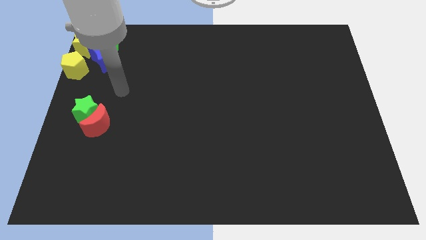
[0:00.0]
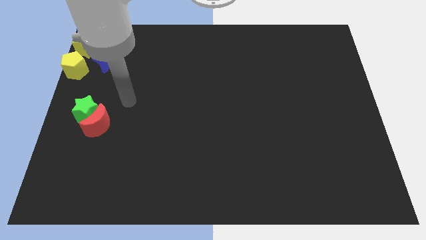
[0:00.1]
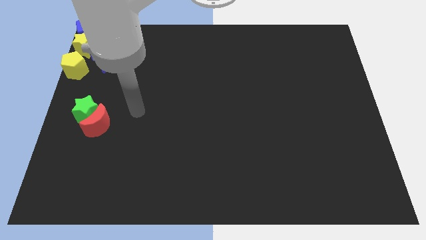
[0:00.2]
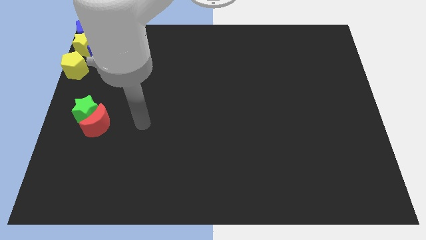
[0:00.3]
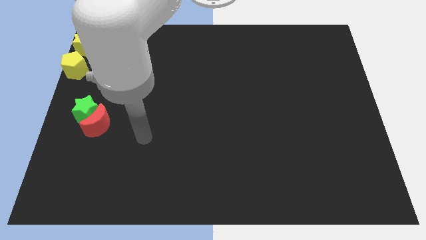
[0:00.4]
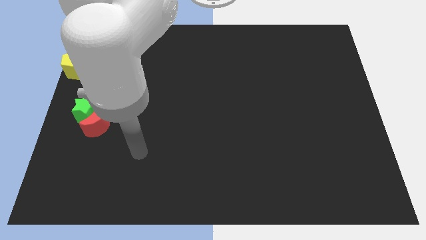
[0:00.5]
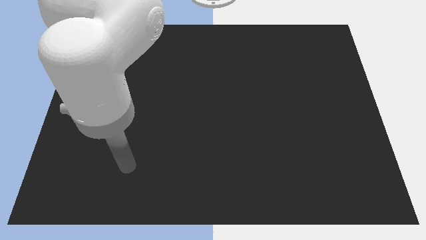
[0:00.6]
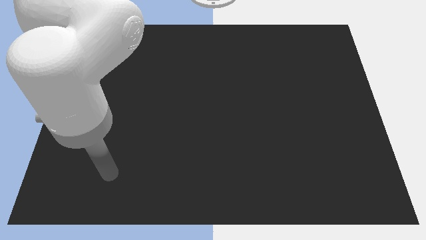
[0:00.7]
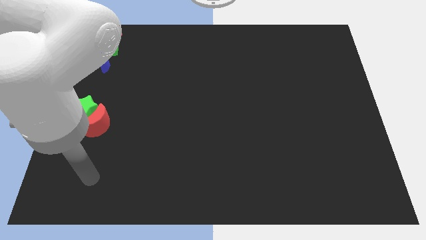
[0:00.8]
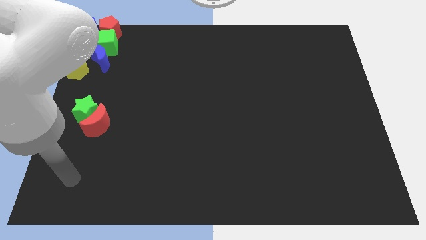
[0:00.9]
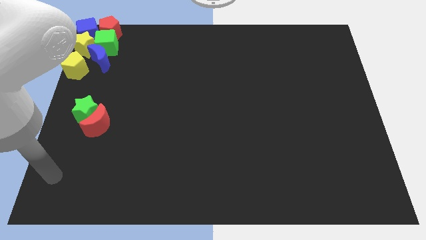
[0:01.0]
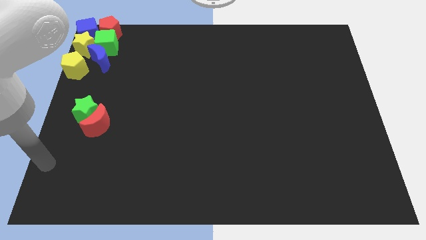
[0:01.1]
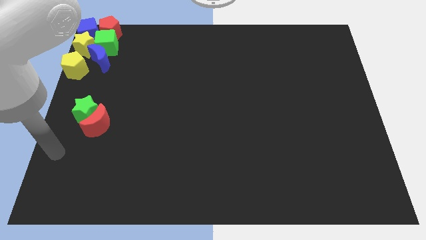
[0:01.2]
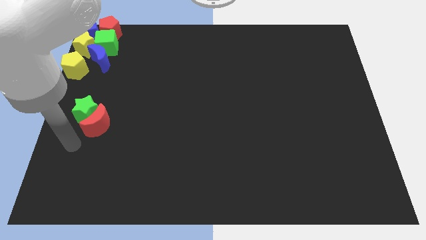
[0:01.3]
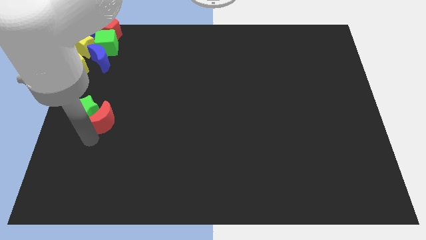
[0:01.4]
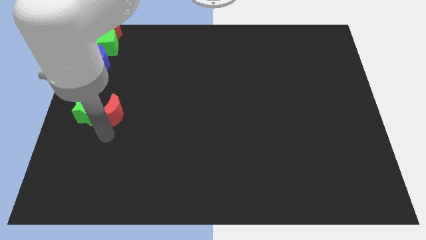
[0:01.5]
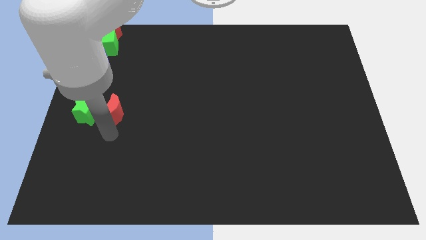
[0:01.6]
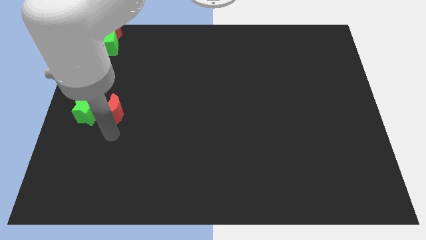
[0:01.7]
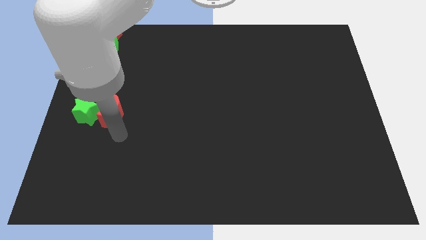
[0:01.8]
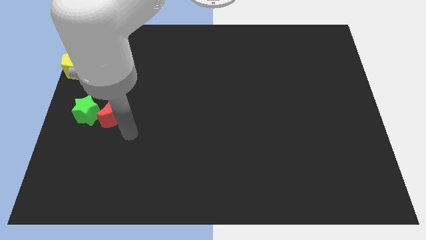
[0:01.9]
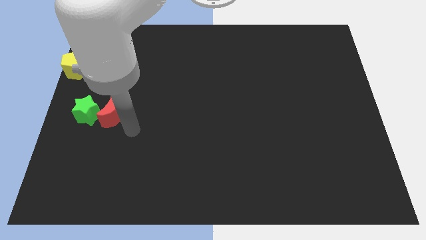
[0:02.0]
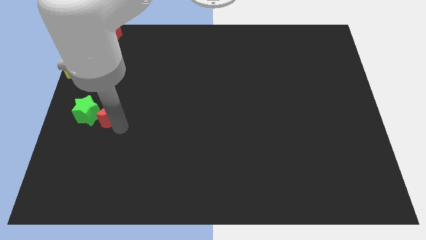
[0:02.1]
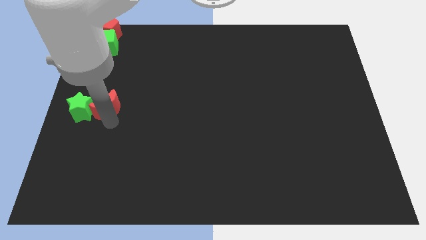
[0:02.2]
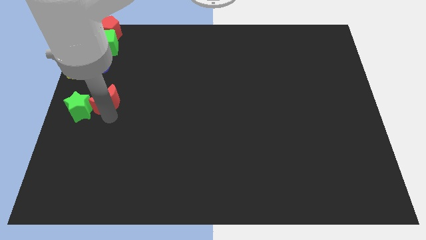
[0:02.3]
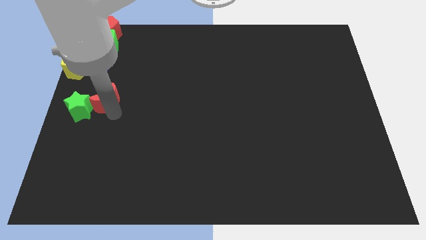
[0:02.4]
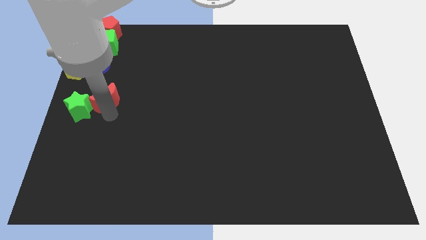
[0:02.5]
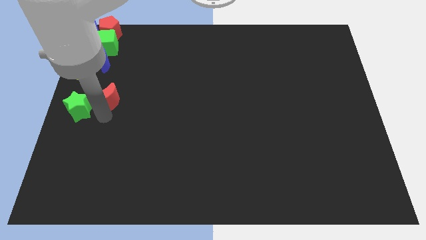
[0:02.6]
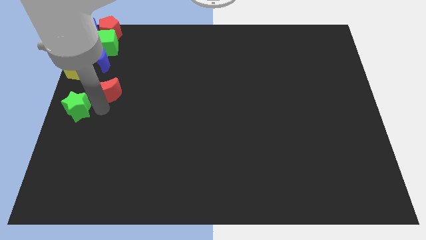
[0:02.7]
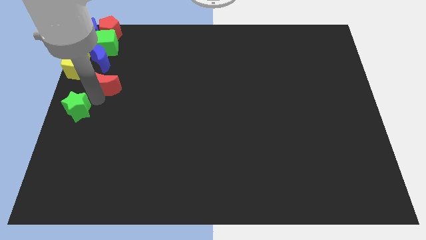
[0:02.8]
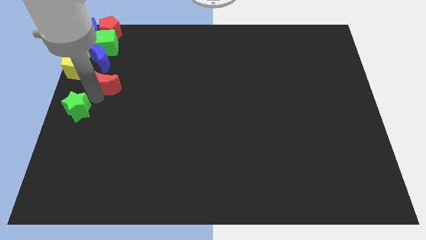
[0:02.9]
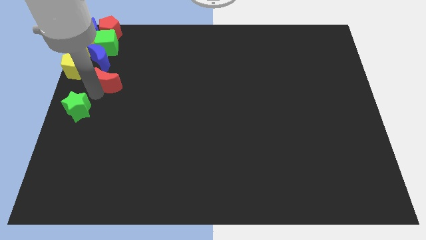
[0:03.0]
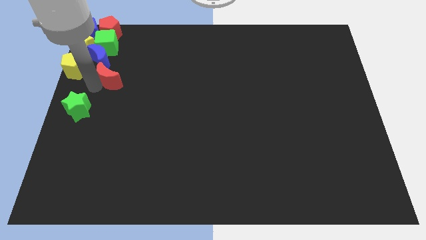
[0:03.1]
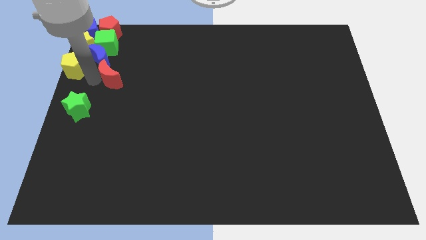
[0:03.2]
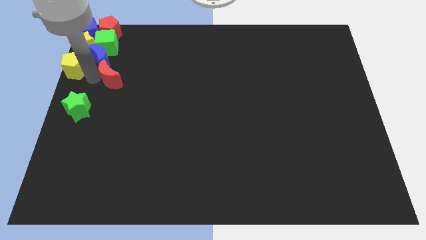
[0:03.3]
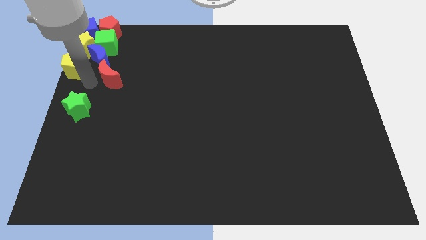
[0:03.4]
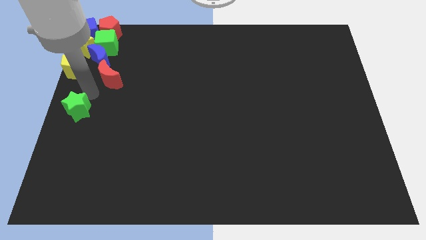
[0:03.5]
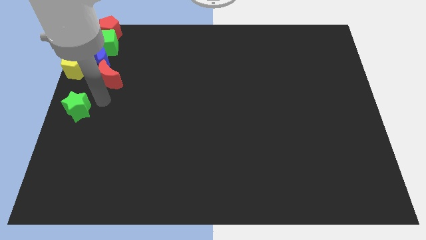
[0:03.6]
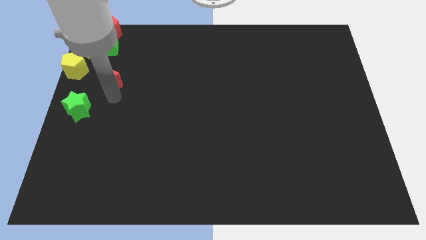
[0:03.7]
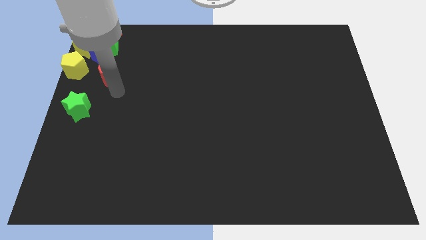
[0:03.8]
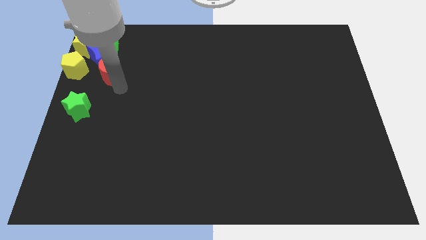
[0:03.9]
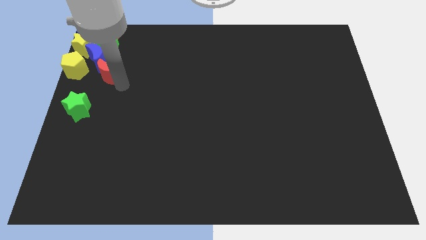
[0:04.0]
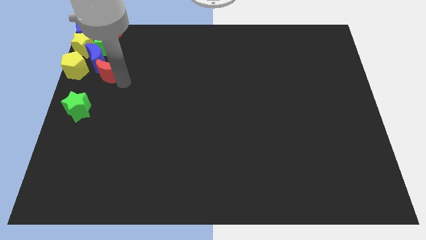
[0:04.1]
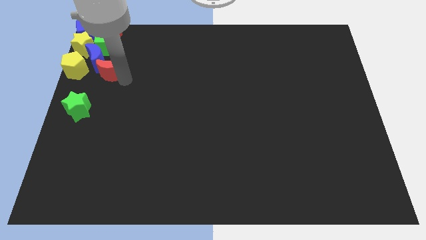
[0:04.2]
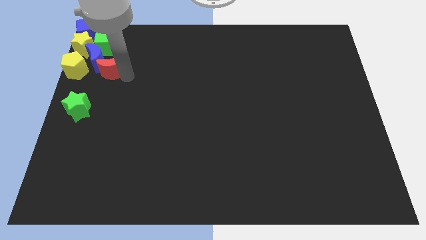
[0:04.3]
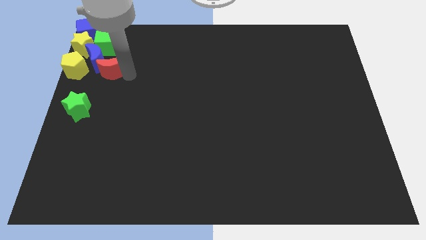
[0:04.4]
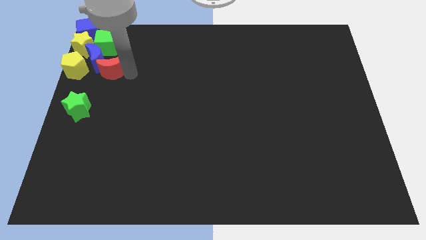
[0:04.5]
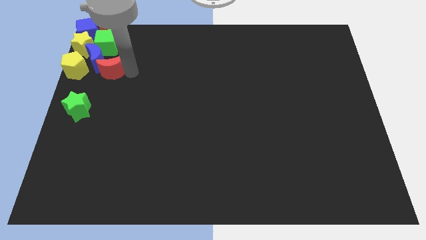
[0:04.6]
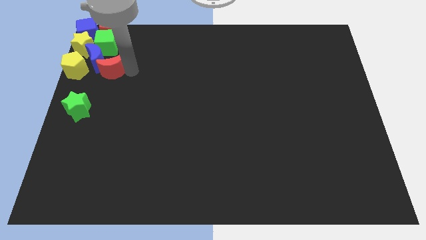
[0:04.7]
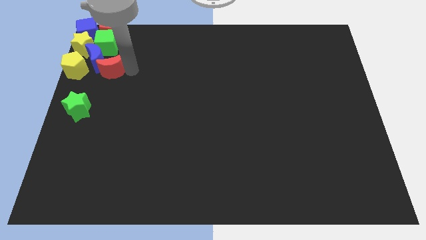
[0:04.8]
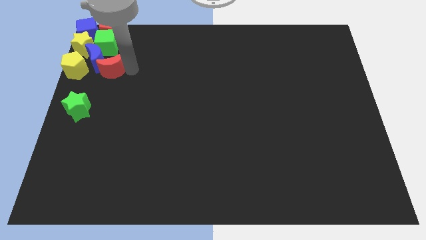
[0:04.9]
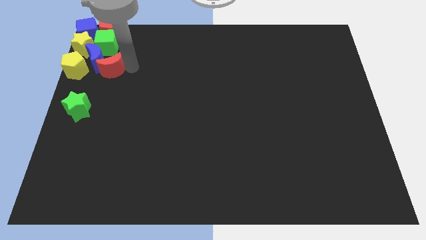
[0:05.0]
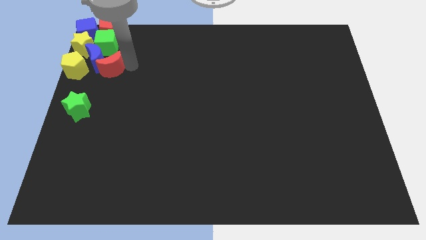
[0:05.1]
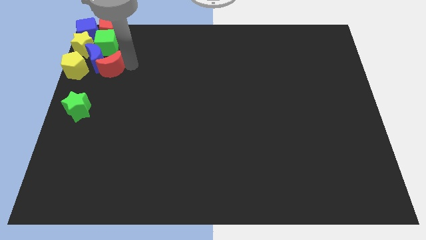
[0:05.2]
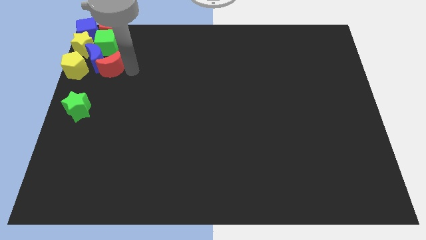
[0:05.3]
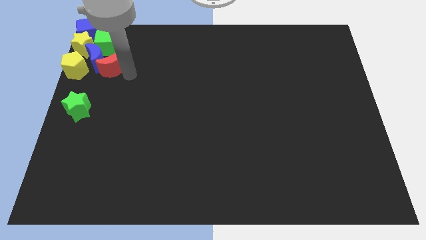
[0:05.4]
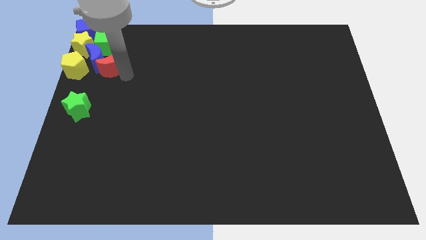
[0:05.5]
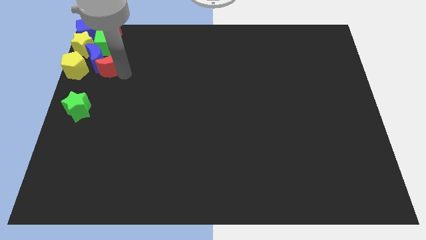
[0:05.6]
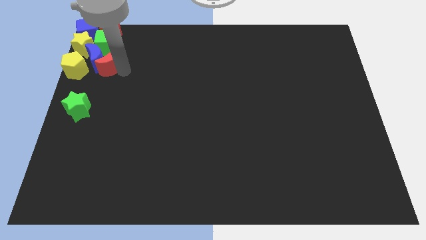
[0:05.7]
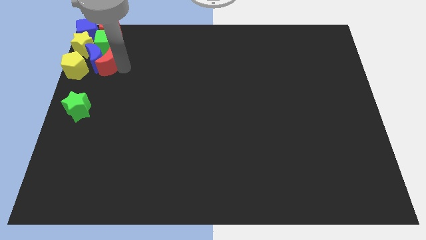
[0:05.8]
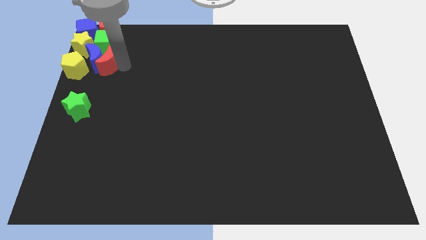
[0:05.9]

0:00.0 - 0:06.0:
push the red crescent into the right side of the blue crescent

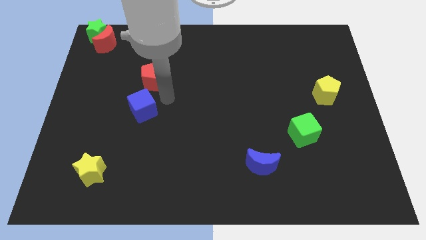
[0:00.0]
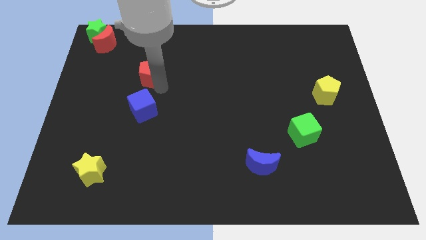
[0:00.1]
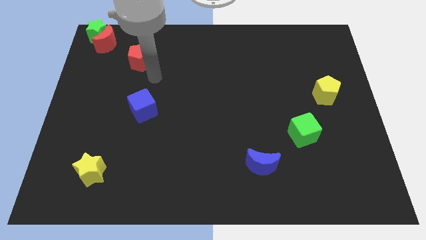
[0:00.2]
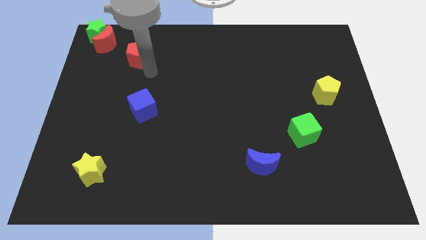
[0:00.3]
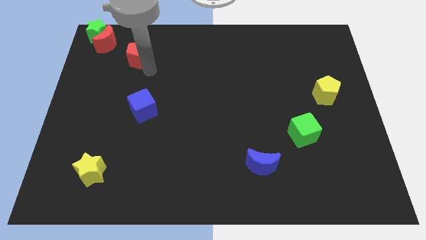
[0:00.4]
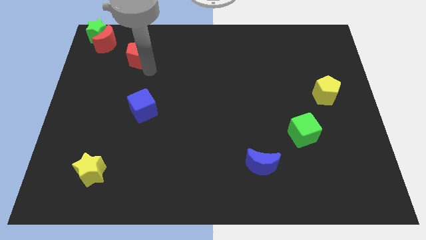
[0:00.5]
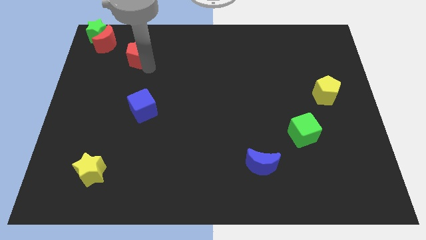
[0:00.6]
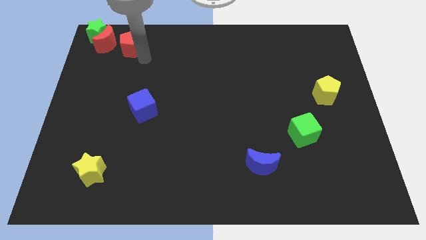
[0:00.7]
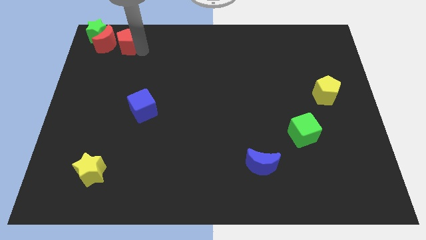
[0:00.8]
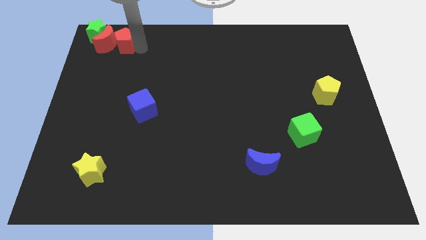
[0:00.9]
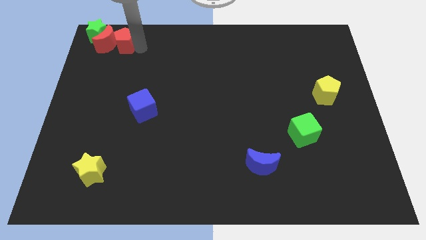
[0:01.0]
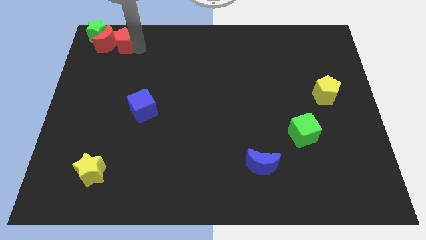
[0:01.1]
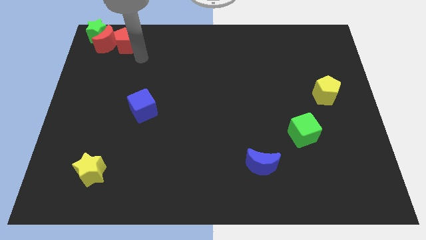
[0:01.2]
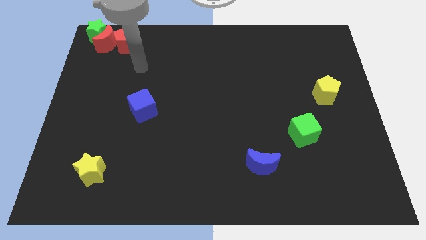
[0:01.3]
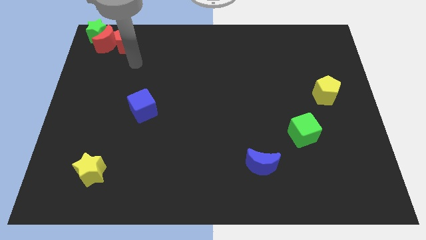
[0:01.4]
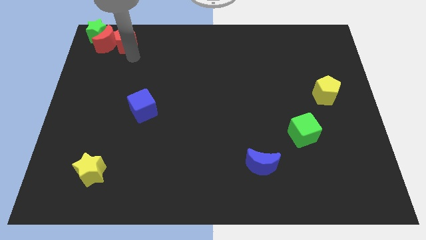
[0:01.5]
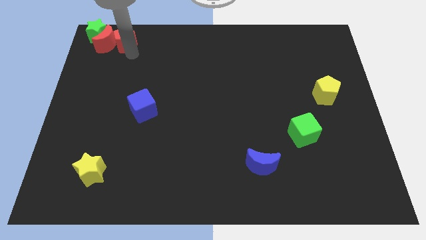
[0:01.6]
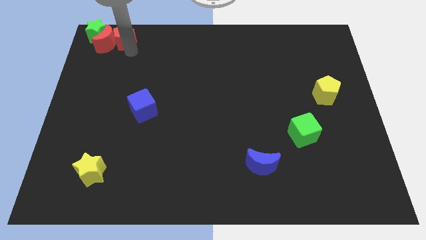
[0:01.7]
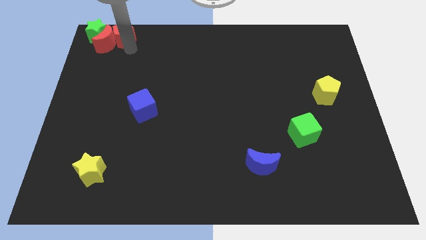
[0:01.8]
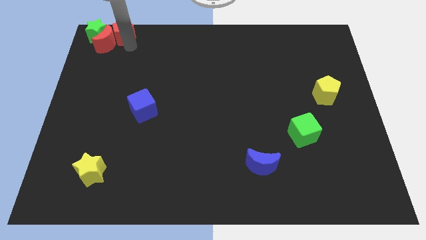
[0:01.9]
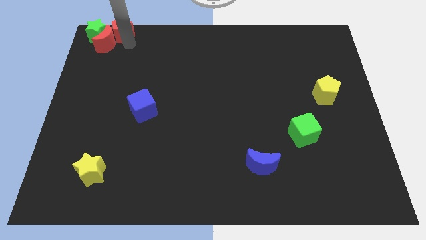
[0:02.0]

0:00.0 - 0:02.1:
move red pentagon beside red moon

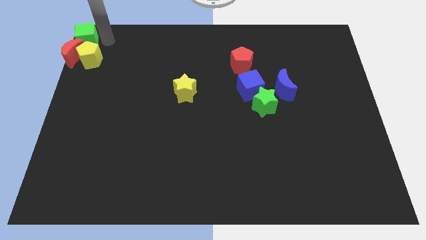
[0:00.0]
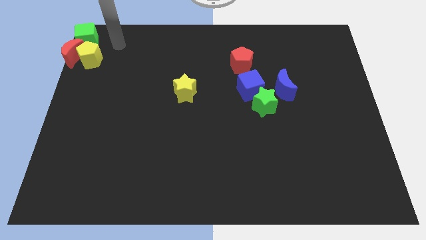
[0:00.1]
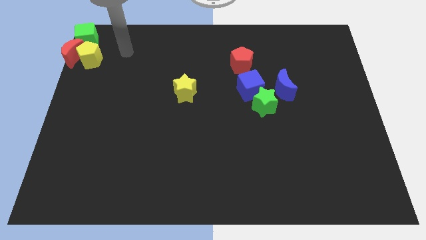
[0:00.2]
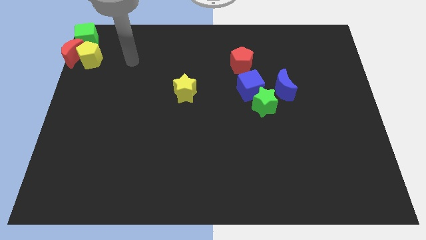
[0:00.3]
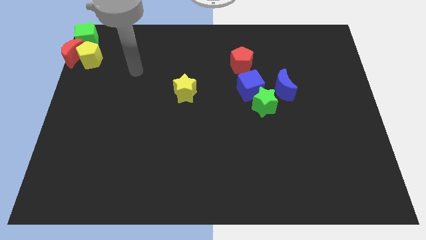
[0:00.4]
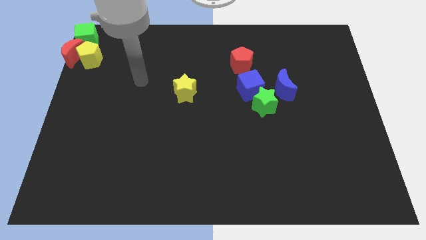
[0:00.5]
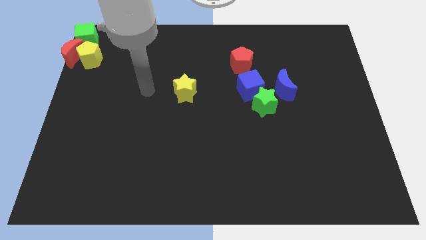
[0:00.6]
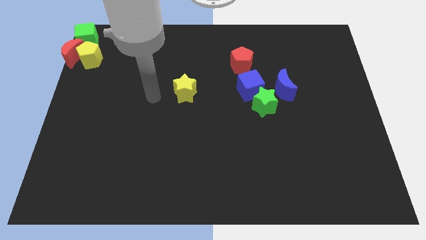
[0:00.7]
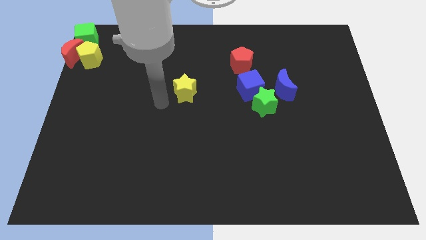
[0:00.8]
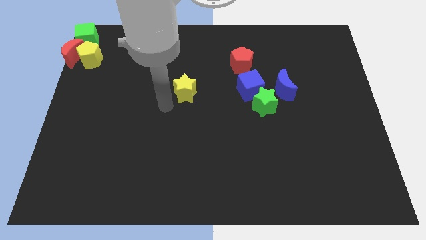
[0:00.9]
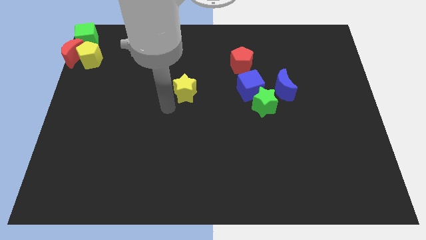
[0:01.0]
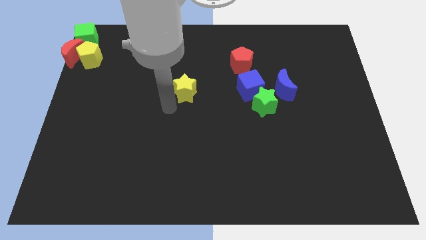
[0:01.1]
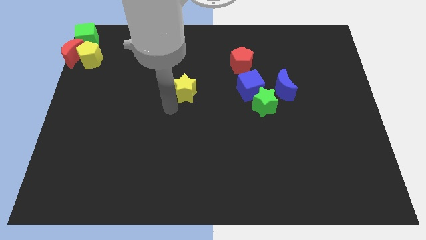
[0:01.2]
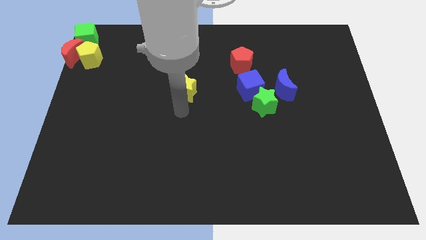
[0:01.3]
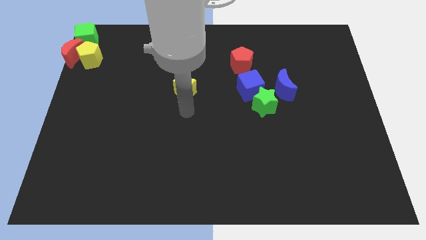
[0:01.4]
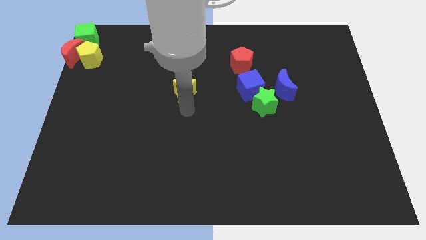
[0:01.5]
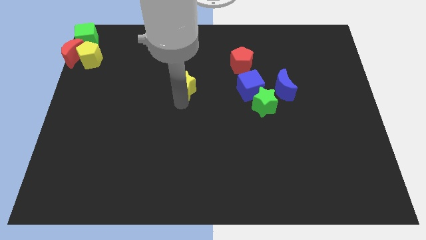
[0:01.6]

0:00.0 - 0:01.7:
point your arm at the bottom side of the yellow star
